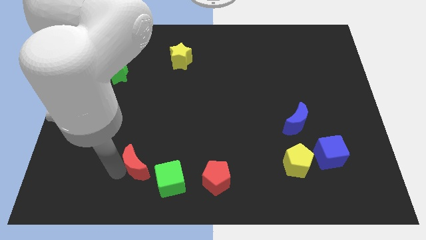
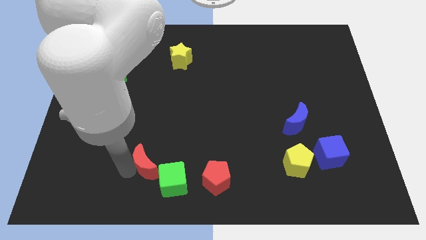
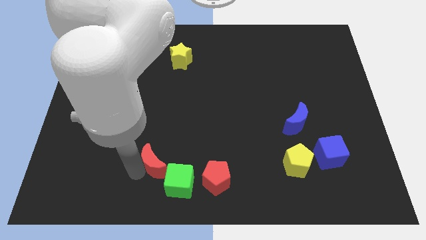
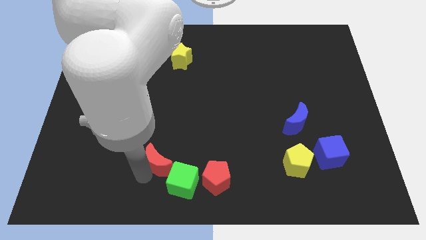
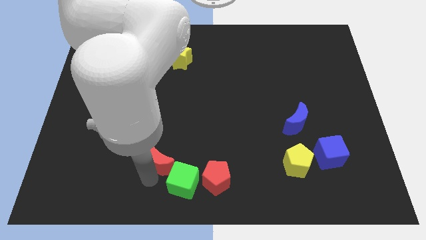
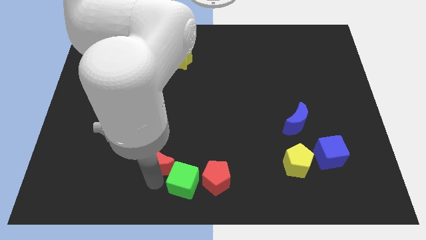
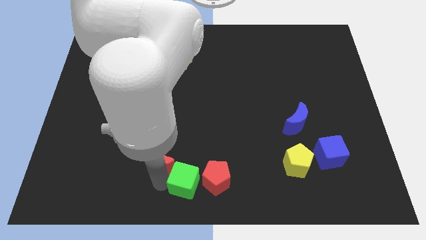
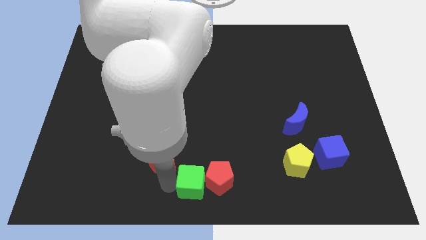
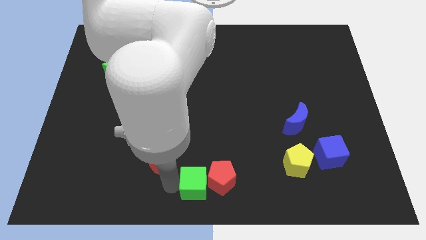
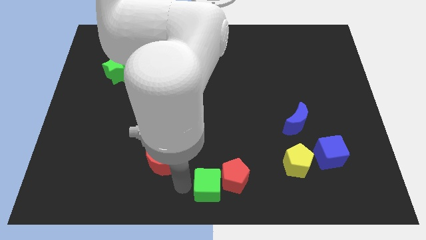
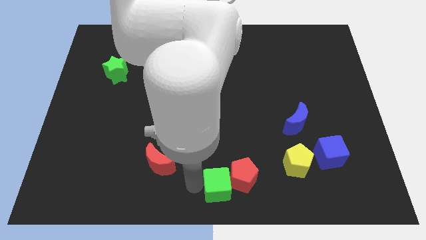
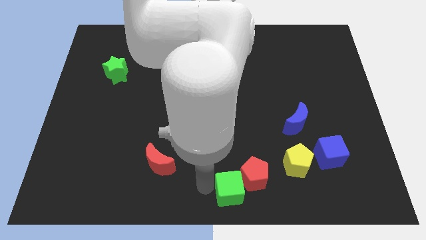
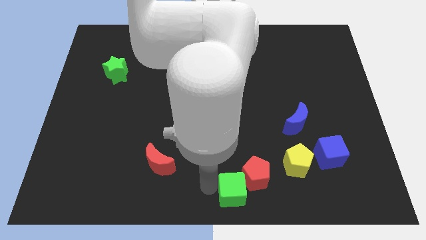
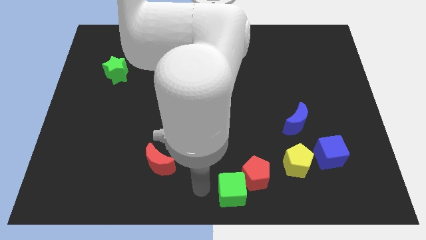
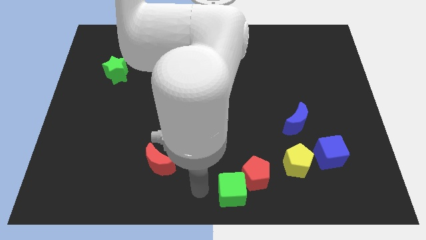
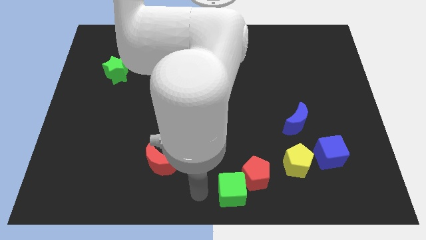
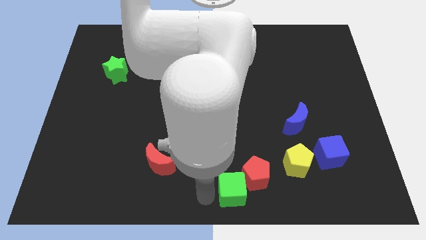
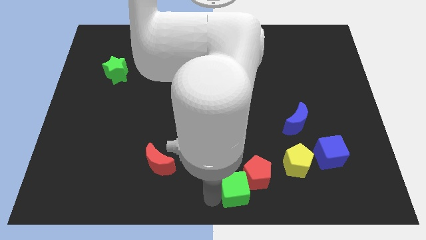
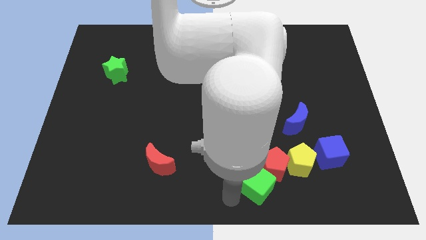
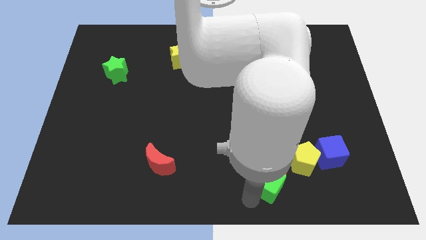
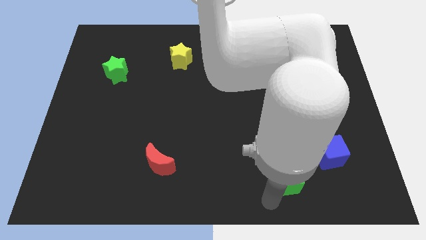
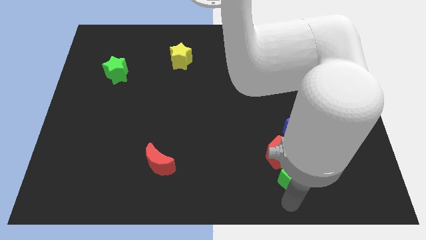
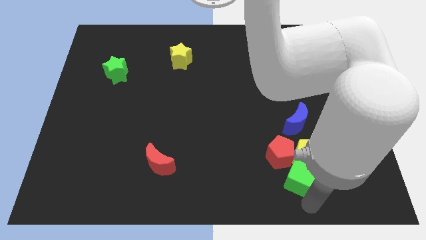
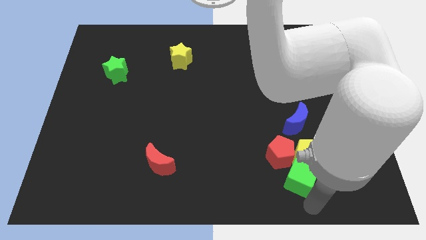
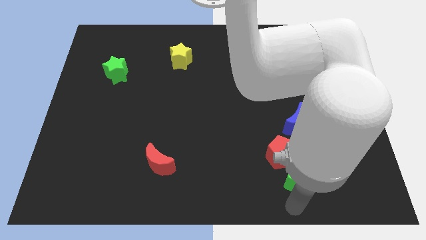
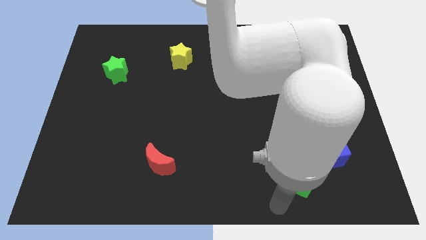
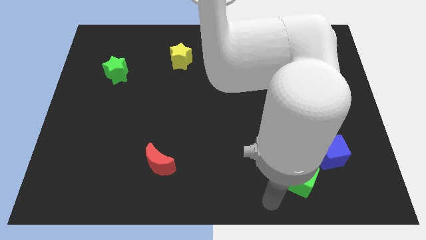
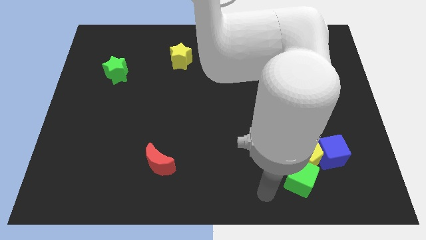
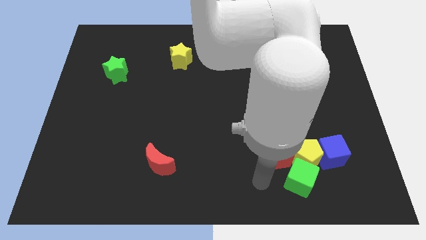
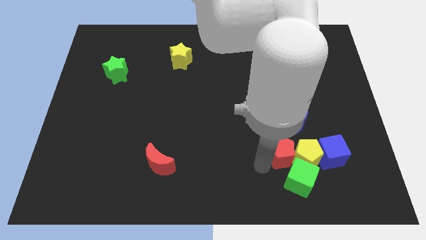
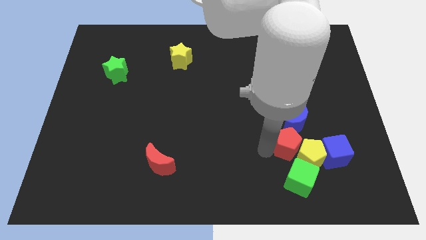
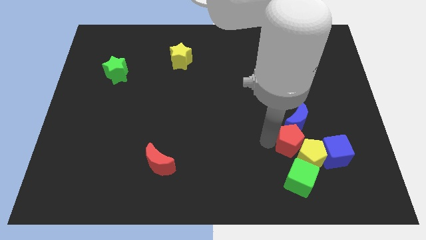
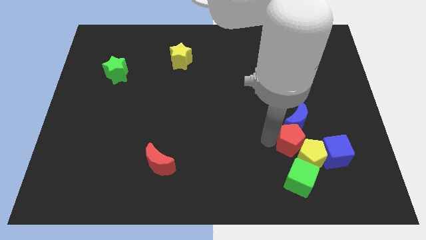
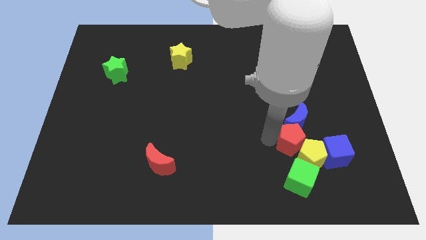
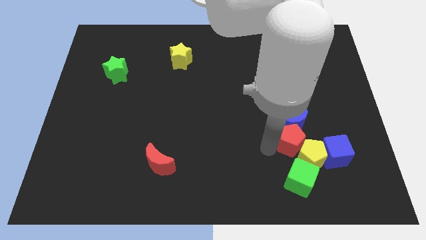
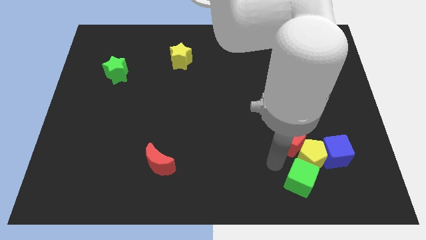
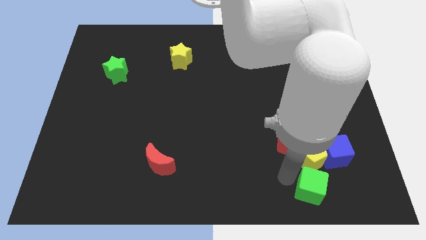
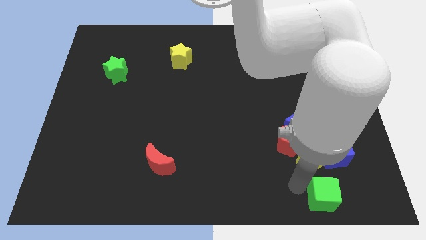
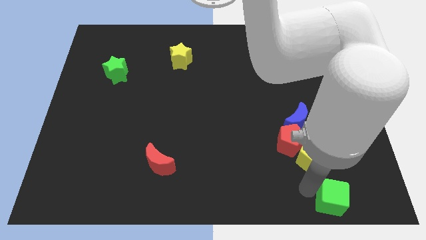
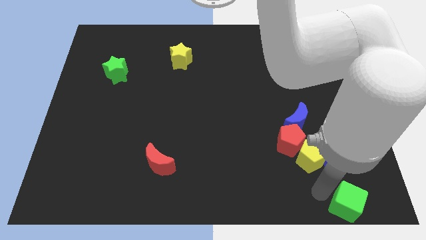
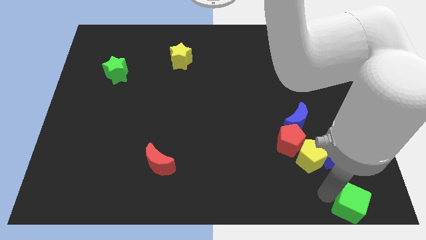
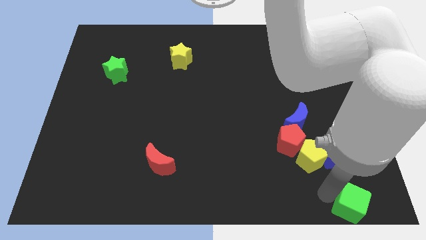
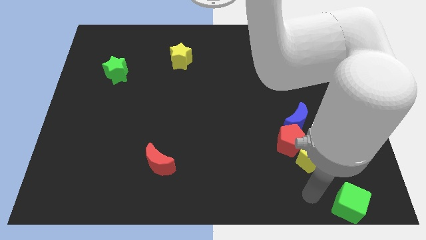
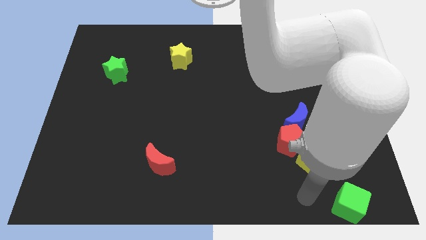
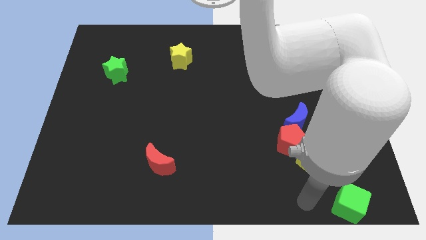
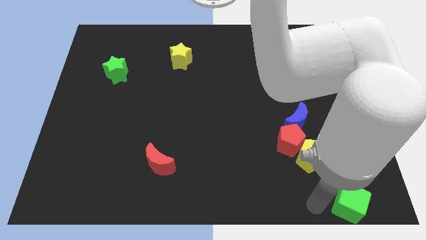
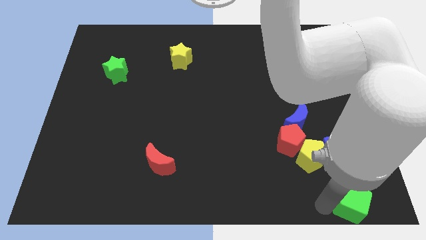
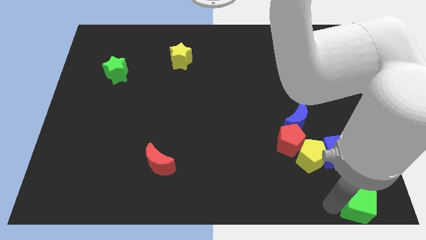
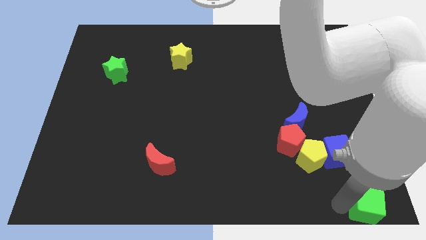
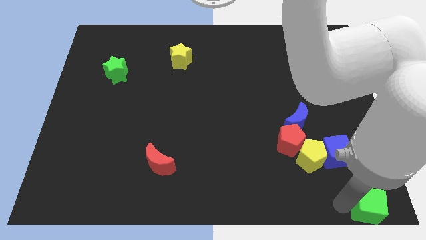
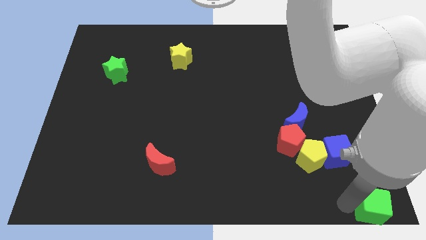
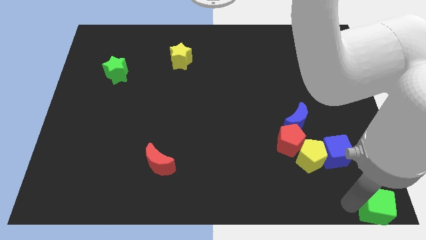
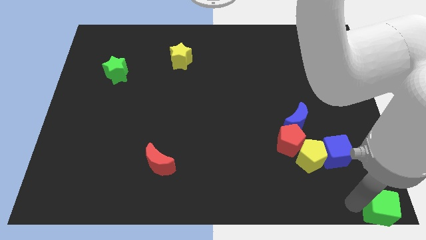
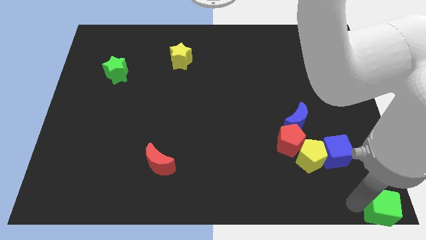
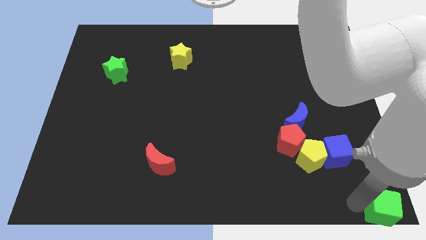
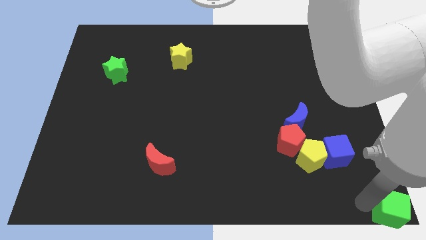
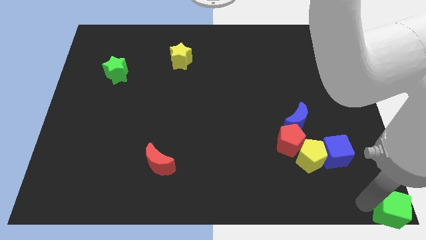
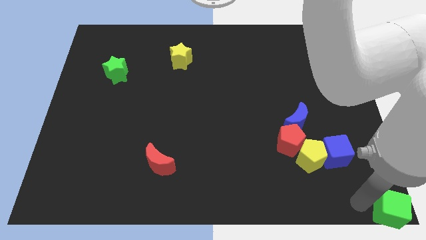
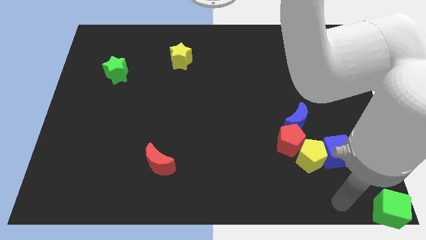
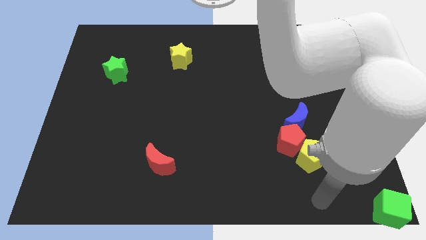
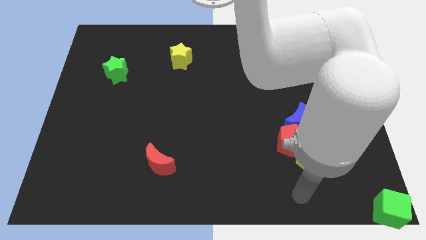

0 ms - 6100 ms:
push the green cube to the bottom right corner

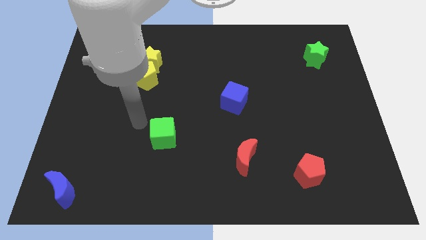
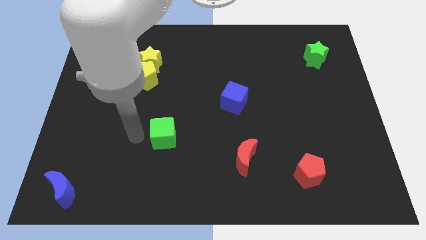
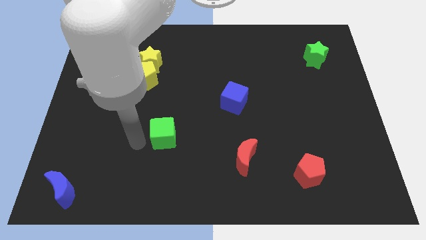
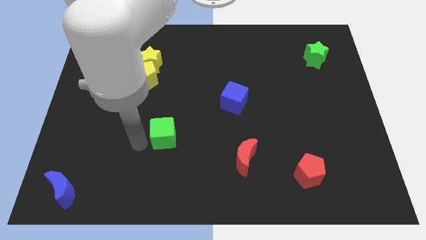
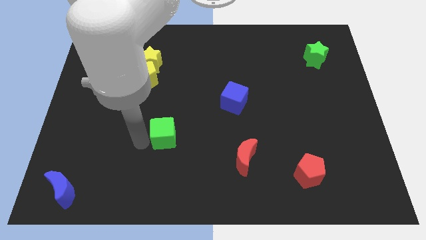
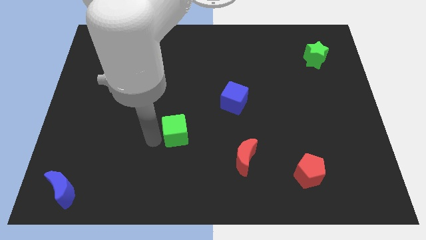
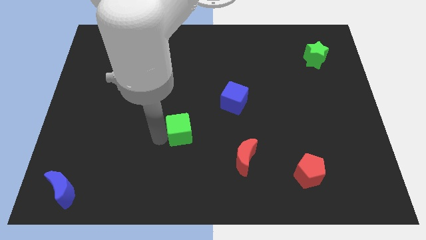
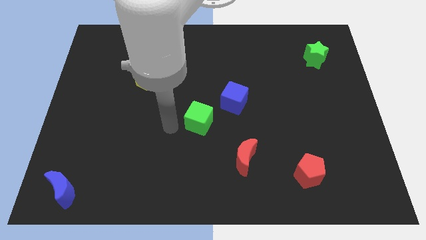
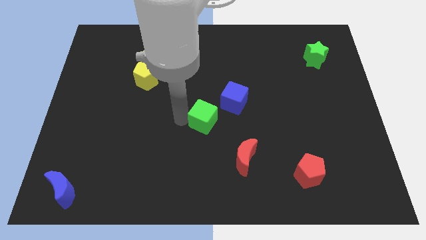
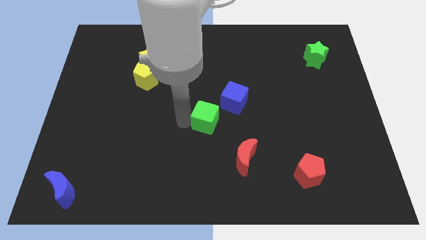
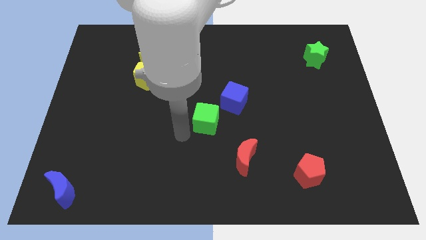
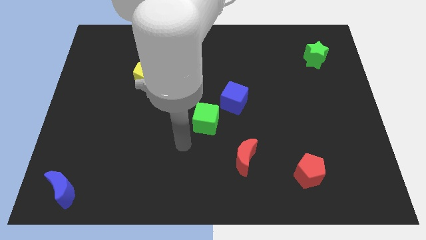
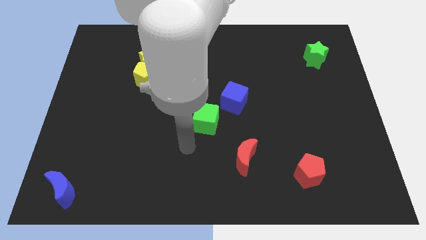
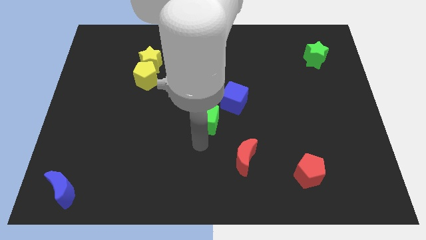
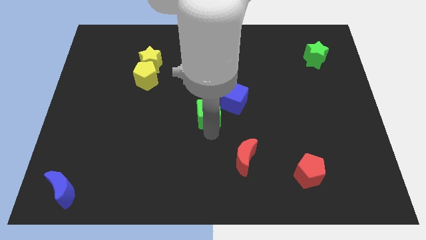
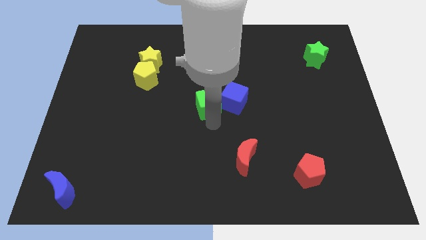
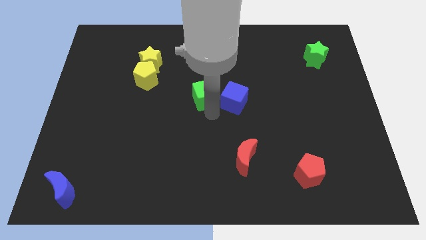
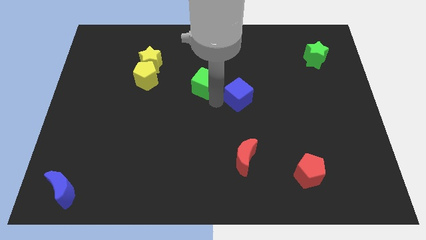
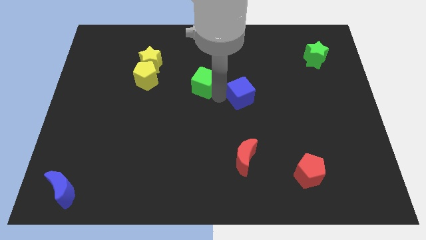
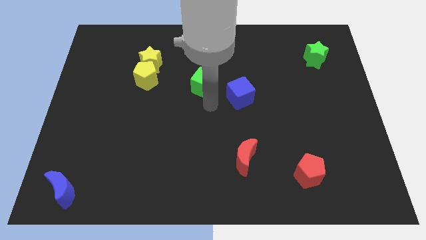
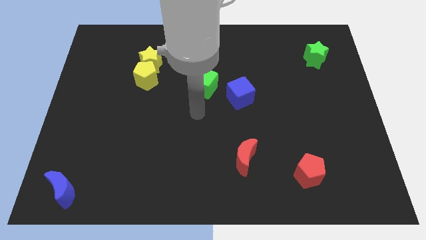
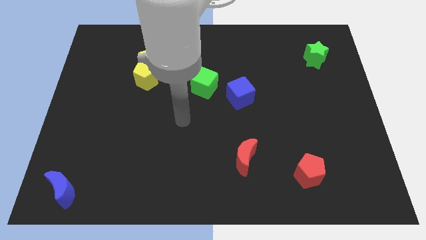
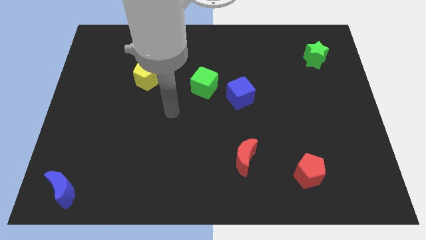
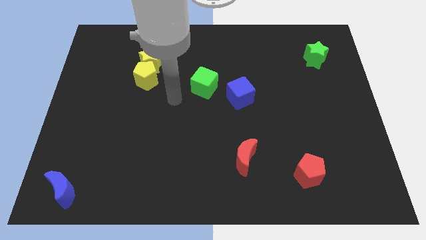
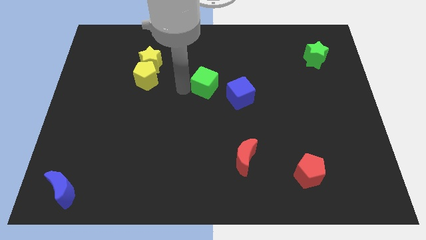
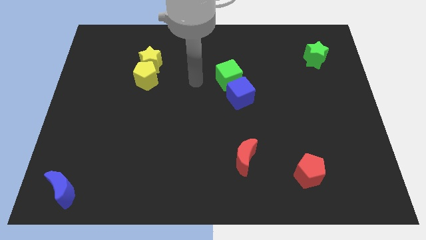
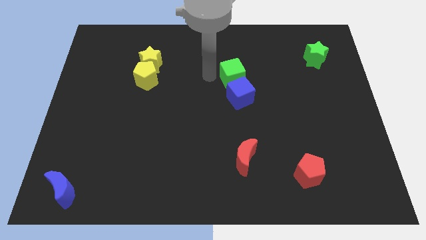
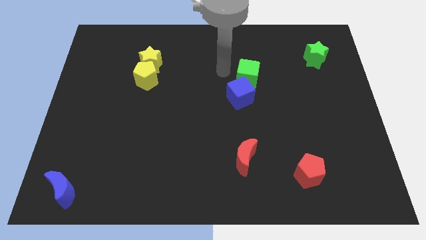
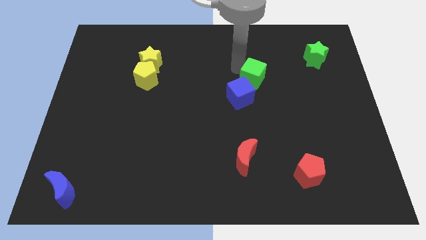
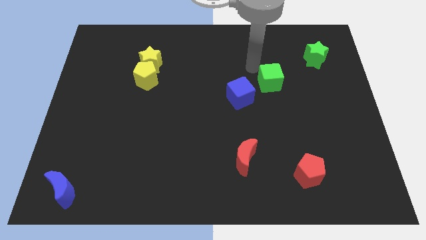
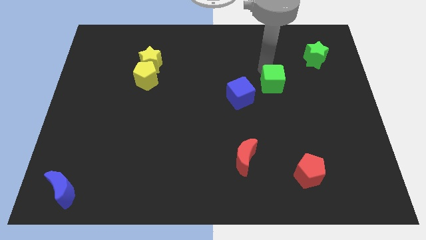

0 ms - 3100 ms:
push the green cube along with the blue cube to the center of the board
